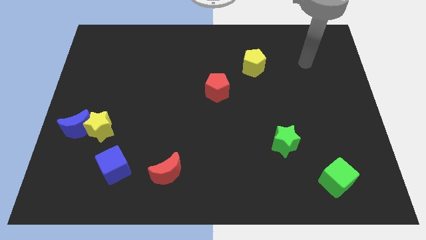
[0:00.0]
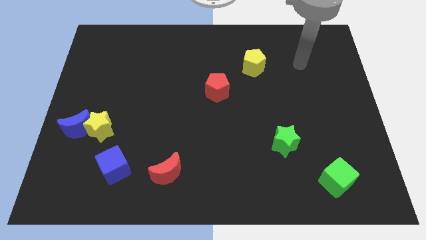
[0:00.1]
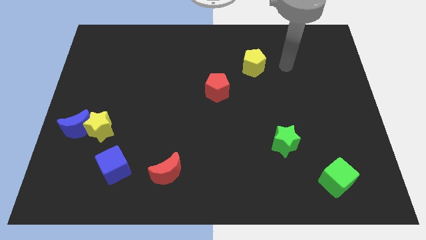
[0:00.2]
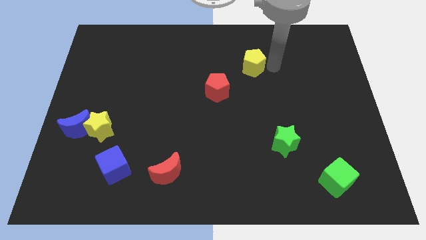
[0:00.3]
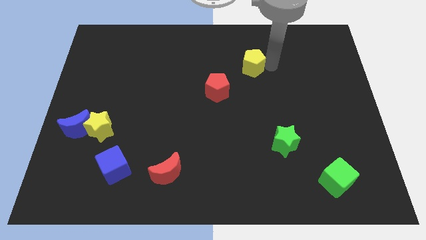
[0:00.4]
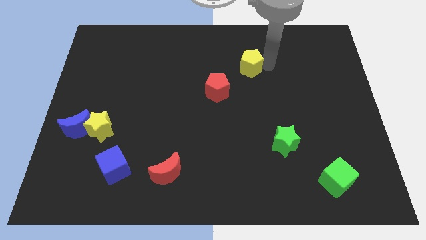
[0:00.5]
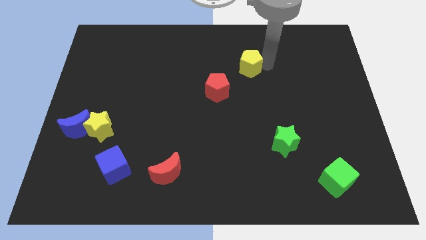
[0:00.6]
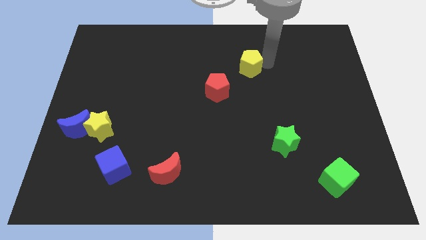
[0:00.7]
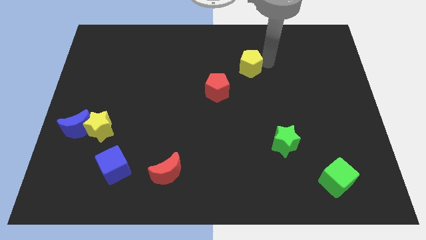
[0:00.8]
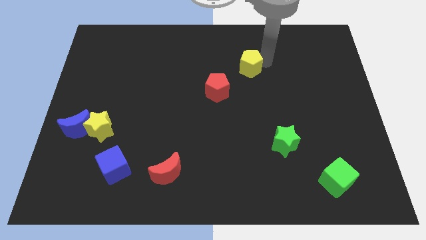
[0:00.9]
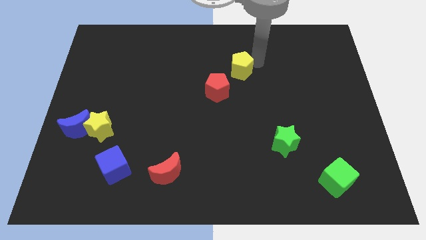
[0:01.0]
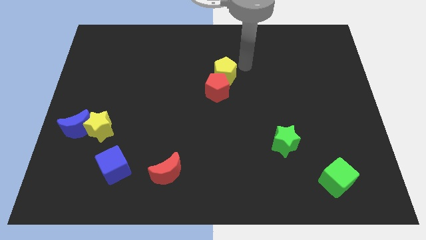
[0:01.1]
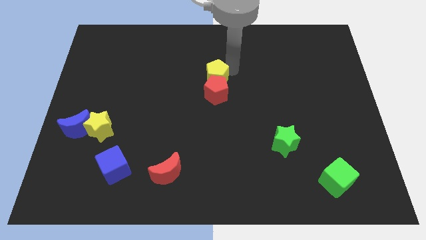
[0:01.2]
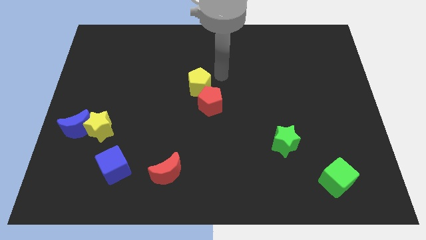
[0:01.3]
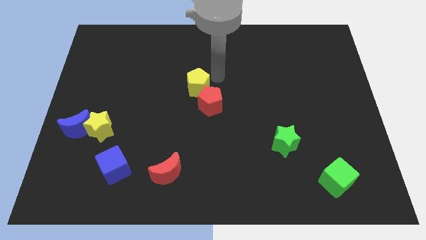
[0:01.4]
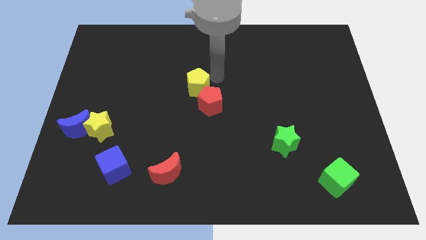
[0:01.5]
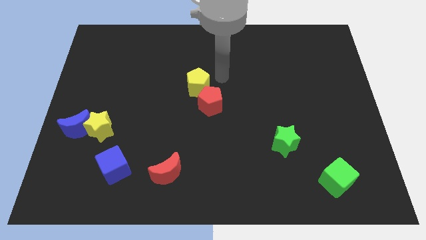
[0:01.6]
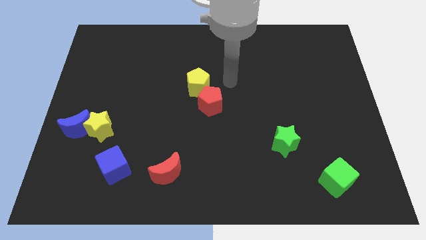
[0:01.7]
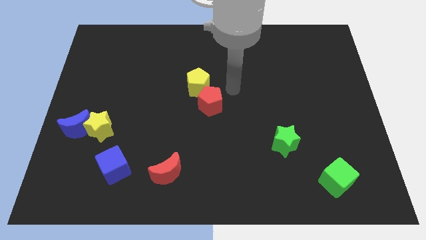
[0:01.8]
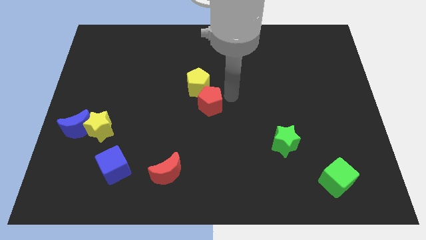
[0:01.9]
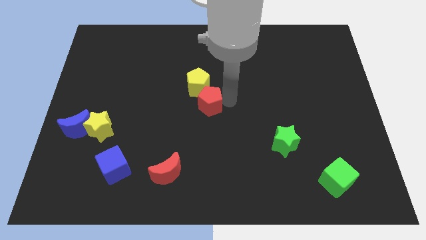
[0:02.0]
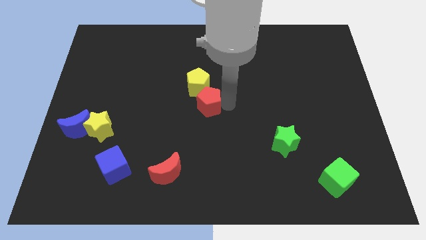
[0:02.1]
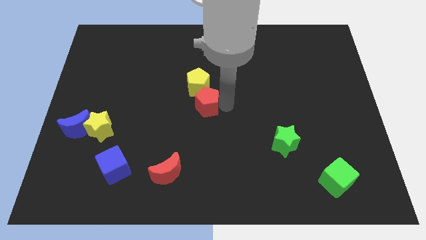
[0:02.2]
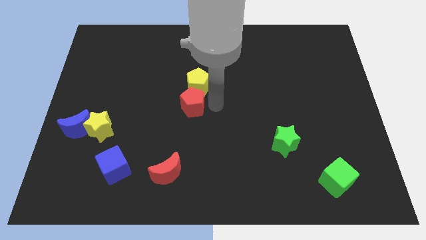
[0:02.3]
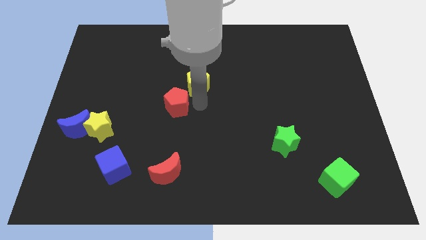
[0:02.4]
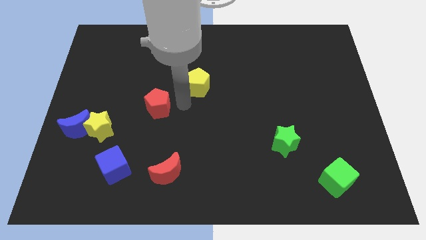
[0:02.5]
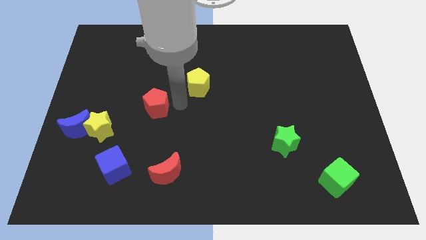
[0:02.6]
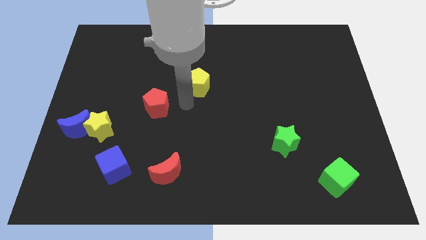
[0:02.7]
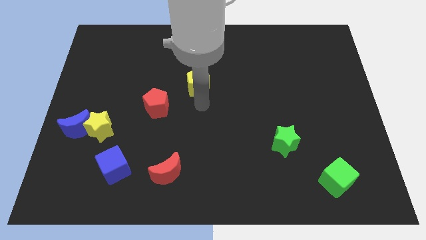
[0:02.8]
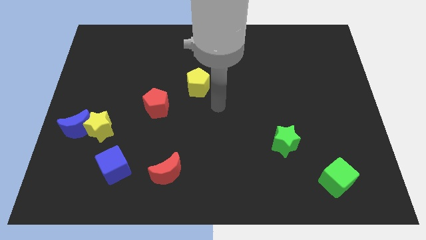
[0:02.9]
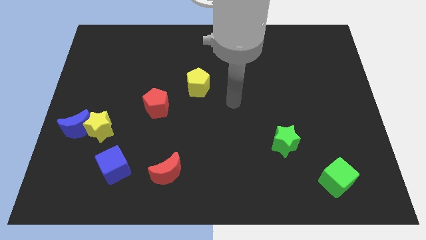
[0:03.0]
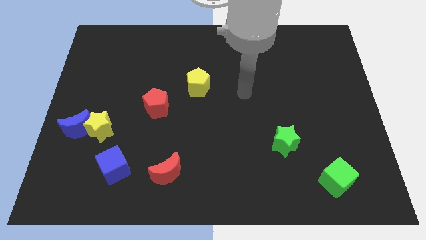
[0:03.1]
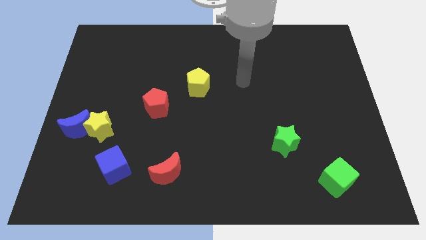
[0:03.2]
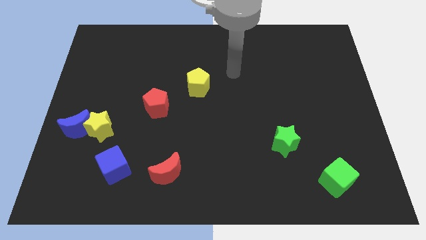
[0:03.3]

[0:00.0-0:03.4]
move yellow and the red pentagon towards the yellow star

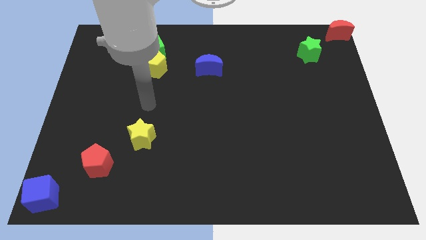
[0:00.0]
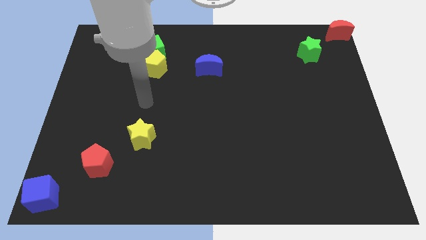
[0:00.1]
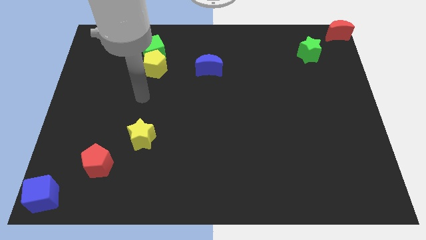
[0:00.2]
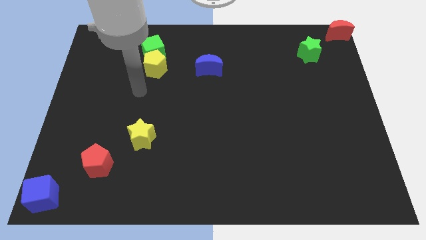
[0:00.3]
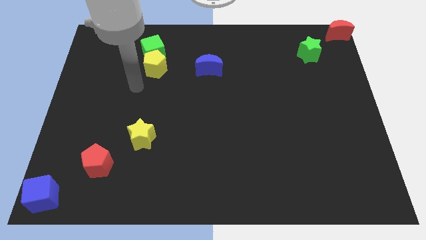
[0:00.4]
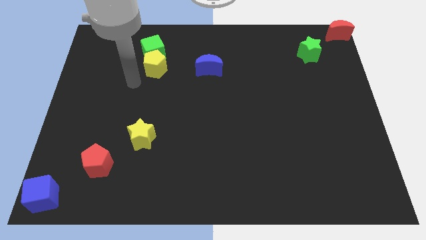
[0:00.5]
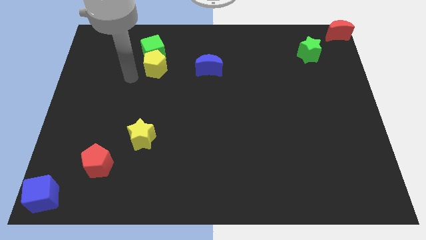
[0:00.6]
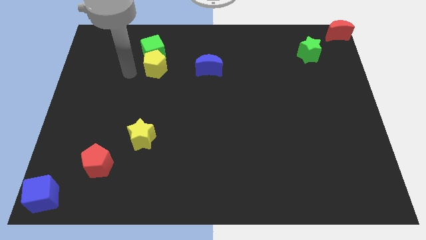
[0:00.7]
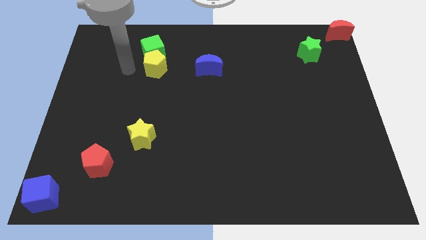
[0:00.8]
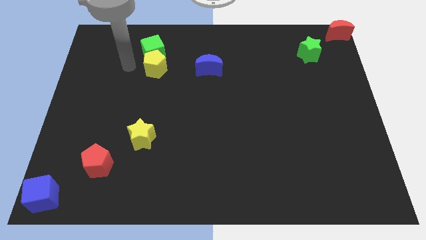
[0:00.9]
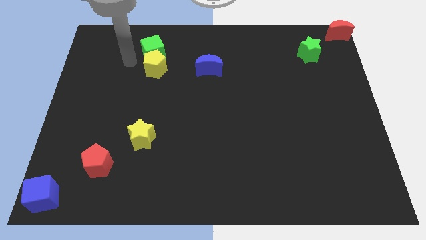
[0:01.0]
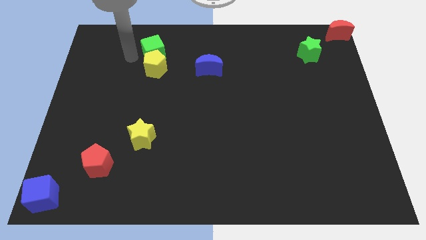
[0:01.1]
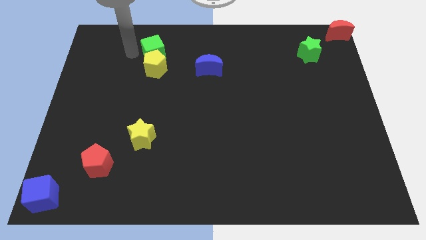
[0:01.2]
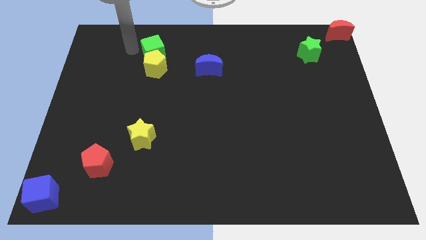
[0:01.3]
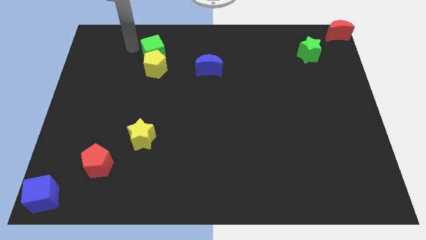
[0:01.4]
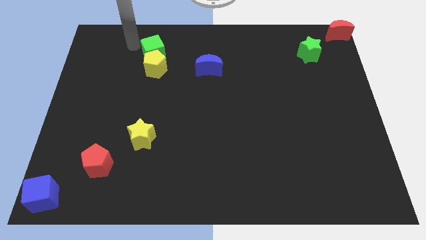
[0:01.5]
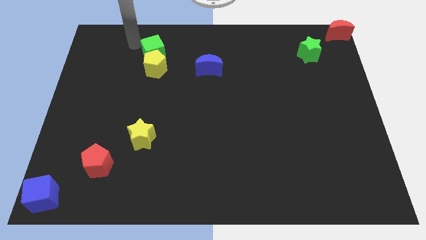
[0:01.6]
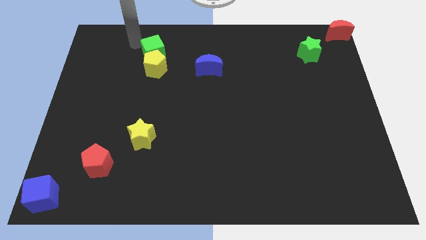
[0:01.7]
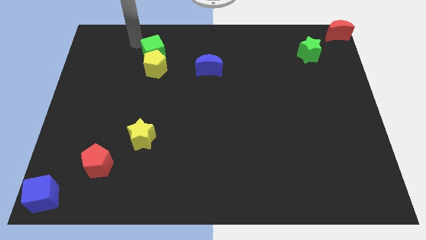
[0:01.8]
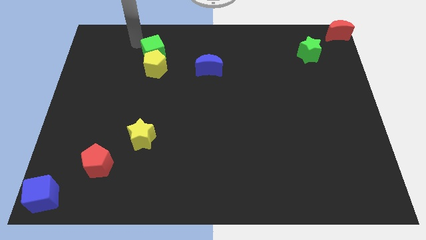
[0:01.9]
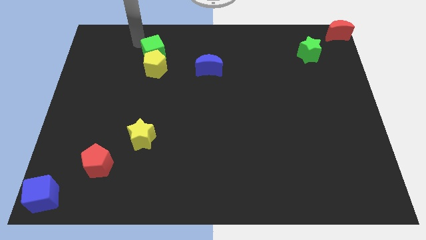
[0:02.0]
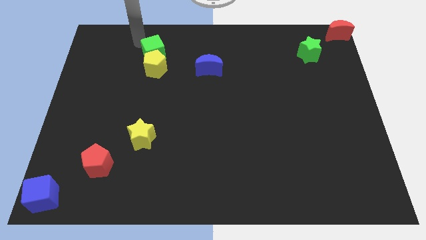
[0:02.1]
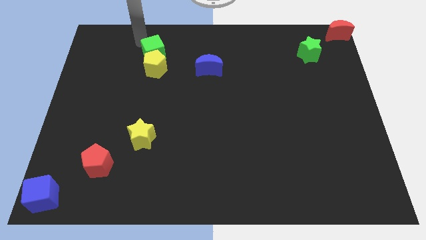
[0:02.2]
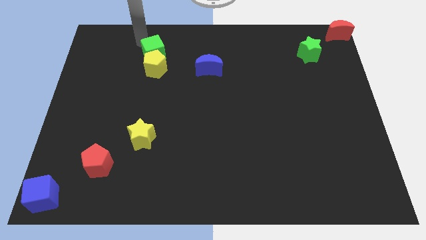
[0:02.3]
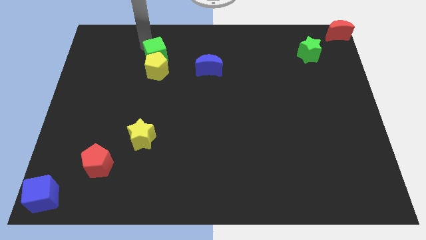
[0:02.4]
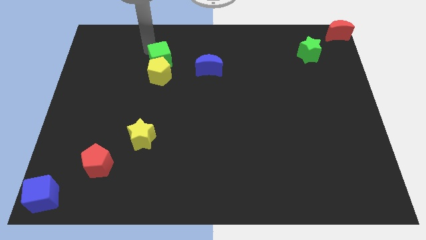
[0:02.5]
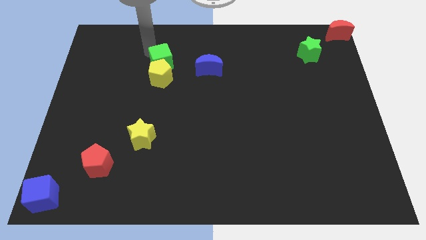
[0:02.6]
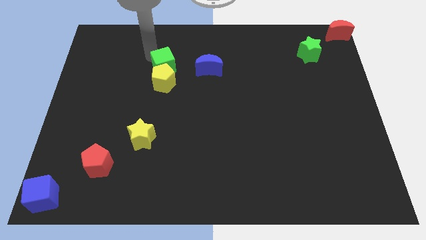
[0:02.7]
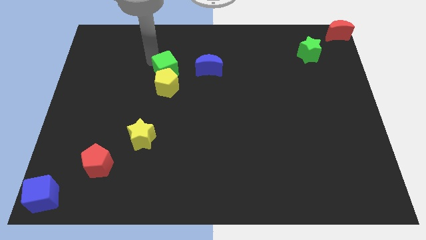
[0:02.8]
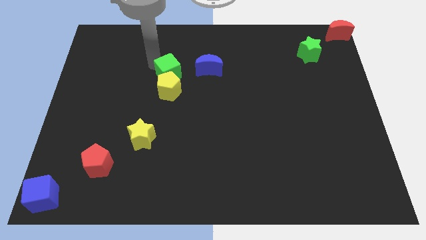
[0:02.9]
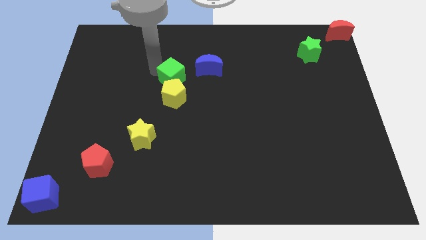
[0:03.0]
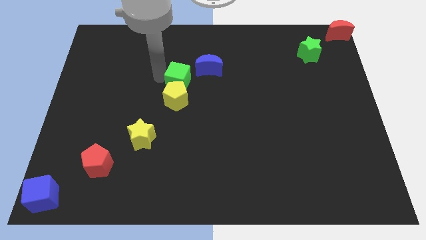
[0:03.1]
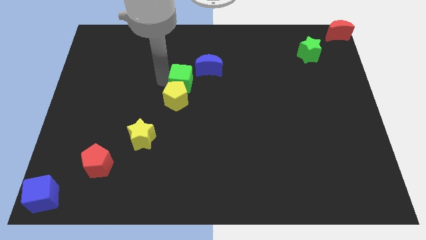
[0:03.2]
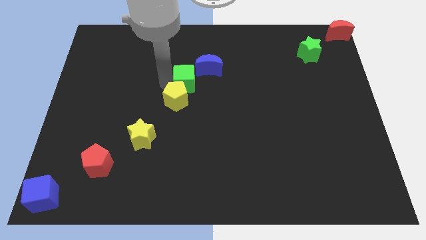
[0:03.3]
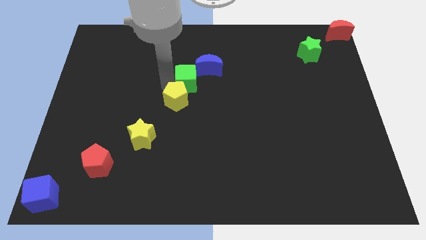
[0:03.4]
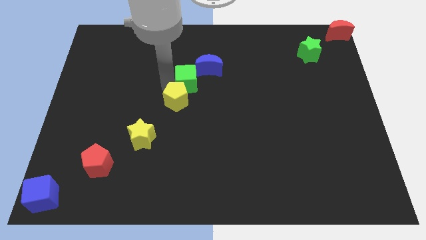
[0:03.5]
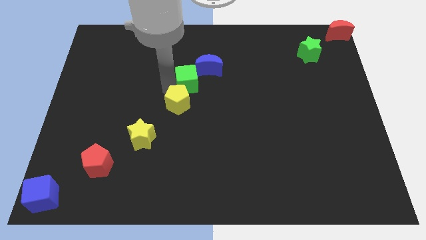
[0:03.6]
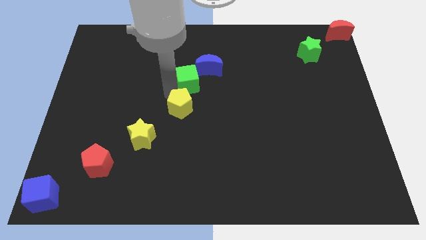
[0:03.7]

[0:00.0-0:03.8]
push the green cube and yellow pentagon towards center side

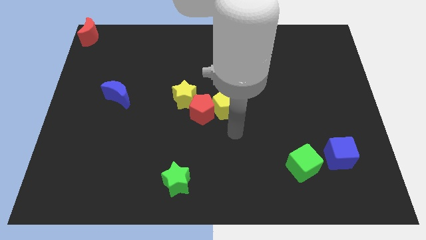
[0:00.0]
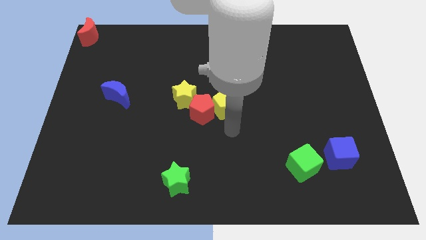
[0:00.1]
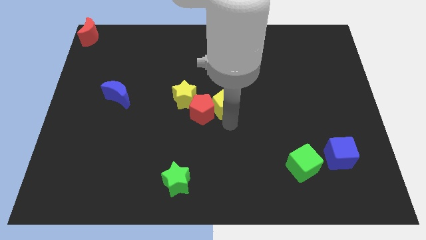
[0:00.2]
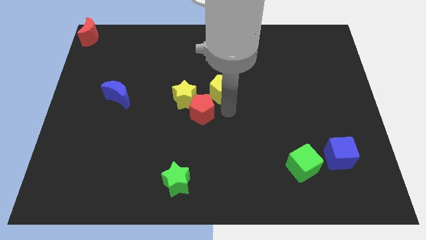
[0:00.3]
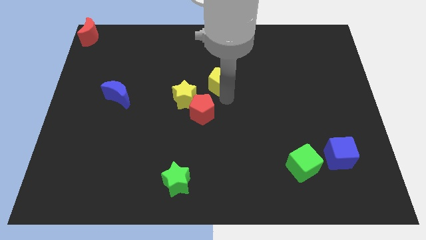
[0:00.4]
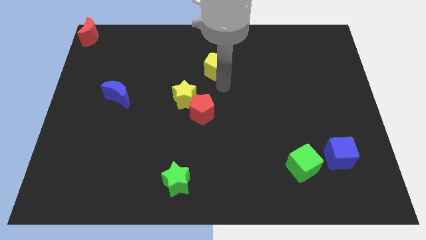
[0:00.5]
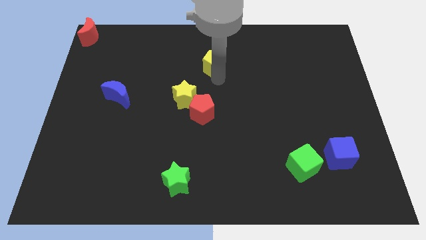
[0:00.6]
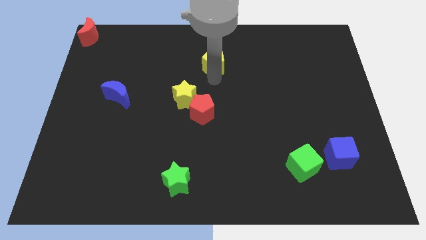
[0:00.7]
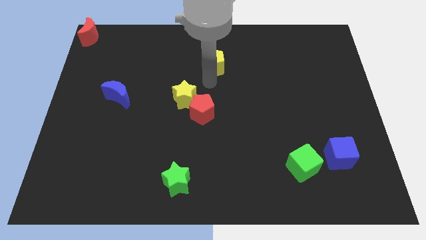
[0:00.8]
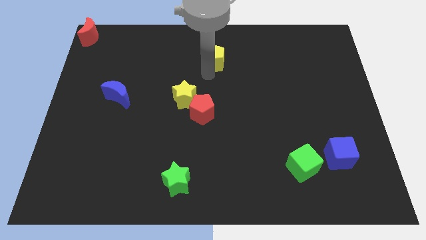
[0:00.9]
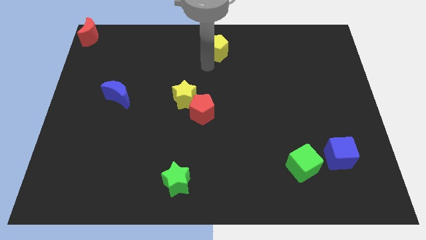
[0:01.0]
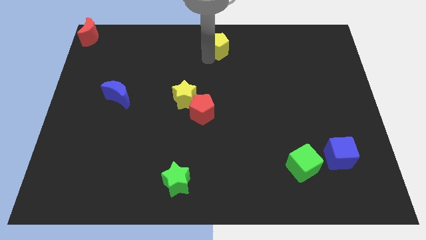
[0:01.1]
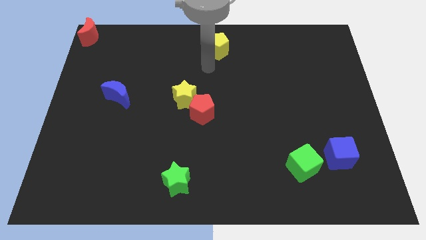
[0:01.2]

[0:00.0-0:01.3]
push the yellow pentagon towards the top side of the board

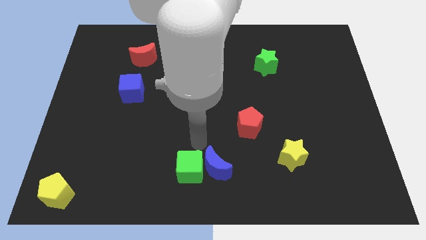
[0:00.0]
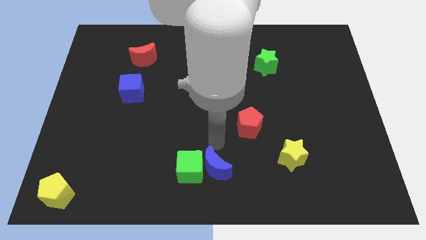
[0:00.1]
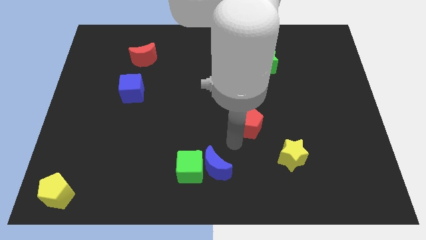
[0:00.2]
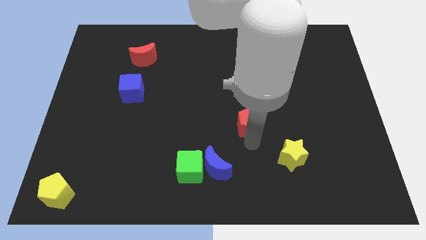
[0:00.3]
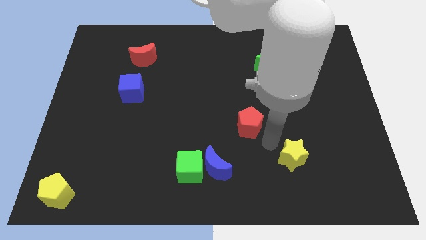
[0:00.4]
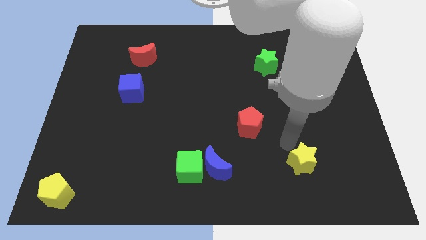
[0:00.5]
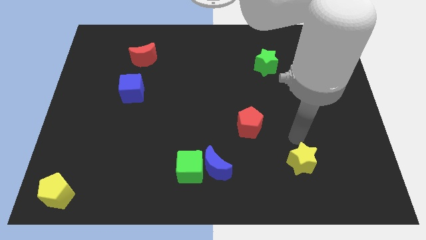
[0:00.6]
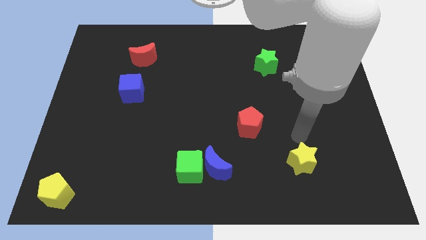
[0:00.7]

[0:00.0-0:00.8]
touch the yellow star on its top
